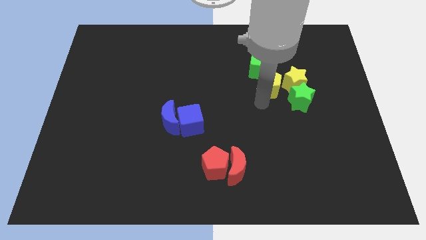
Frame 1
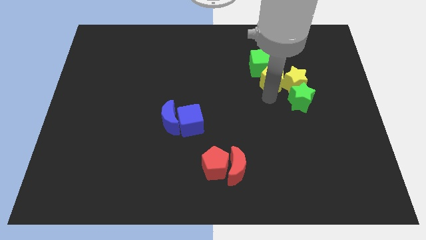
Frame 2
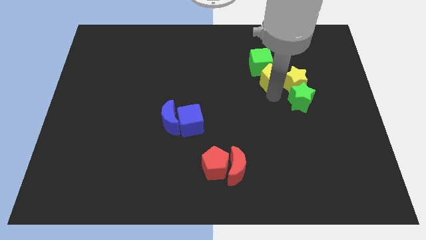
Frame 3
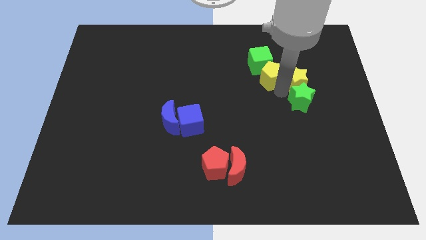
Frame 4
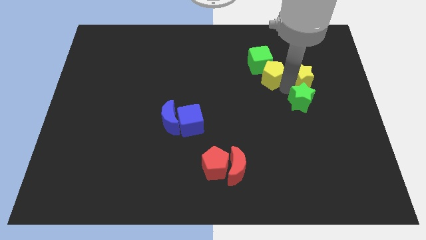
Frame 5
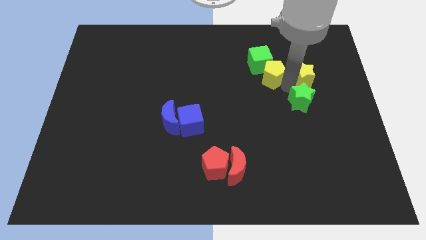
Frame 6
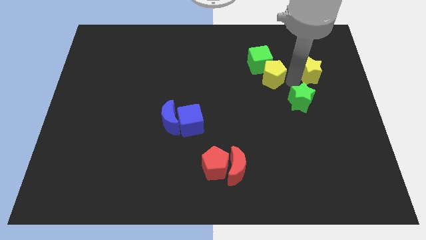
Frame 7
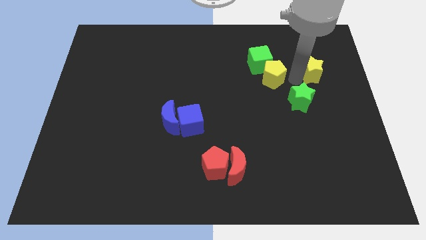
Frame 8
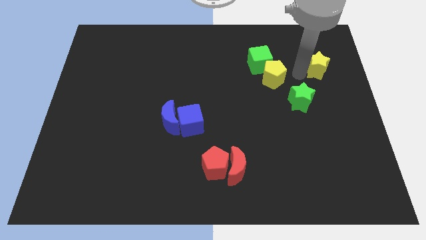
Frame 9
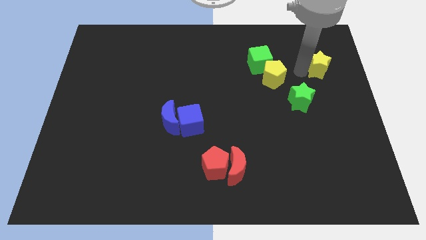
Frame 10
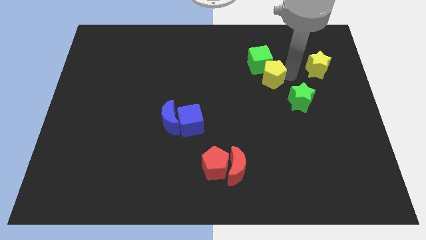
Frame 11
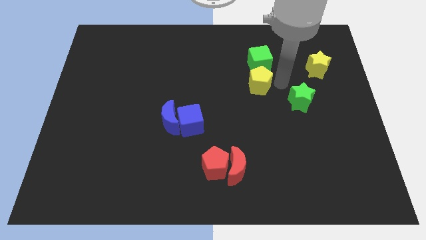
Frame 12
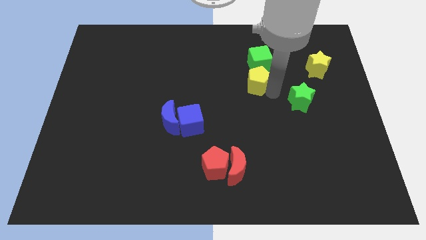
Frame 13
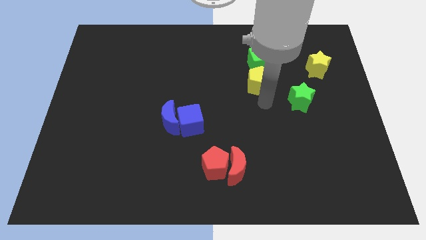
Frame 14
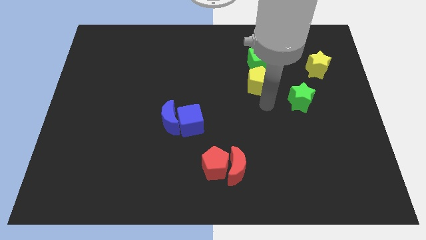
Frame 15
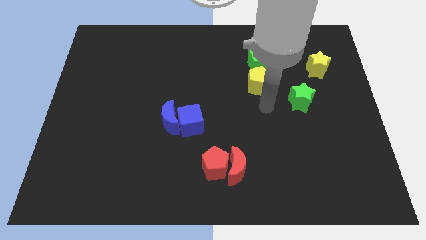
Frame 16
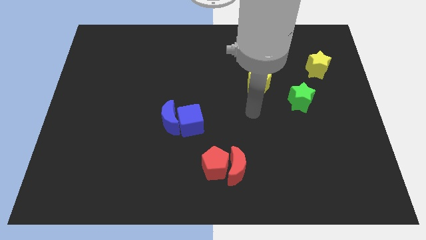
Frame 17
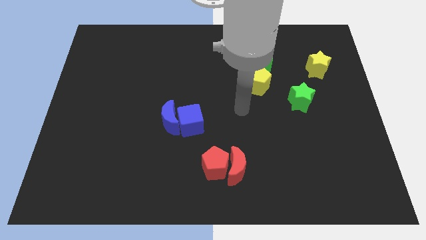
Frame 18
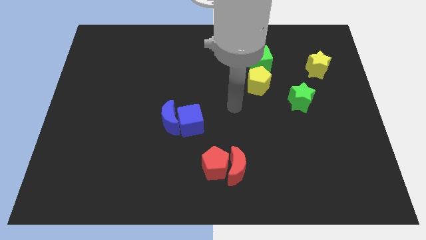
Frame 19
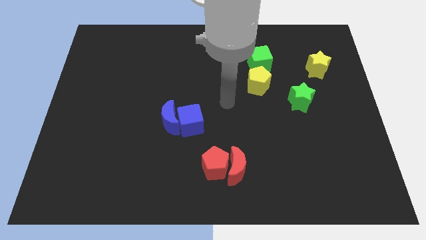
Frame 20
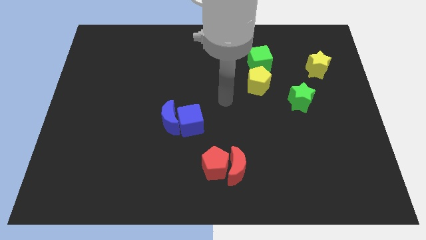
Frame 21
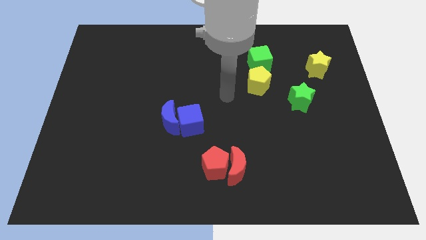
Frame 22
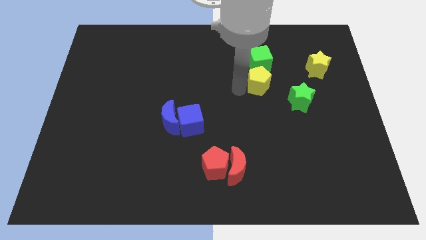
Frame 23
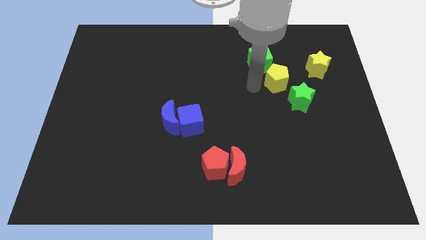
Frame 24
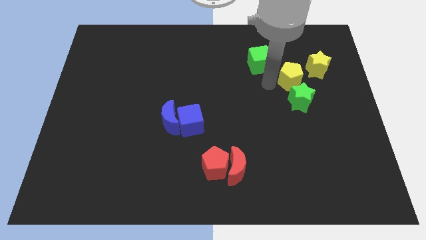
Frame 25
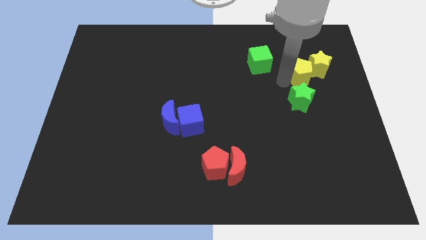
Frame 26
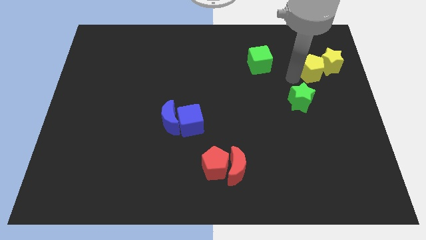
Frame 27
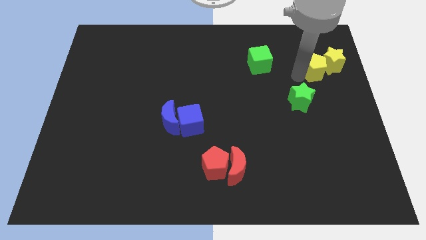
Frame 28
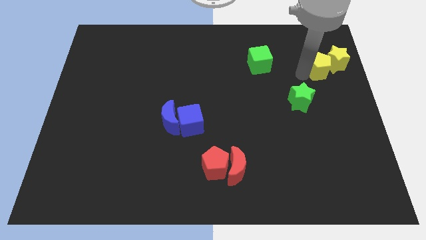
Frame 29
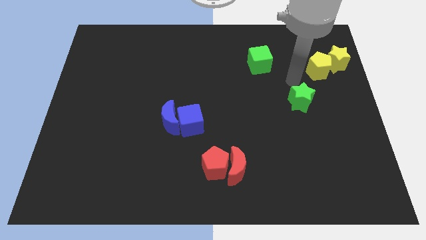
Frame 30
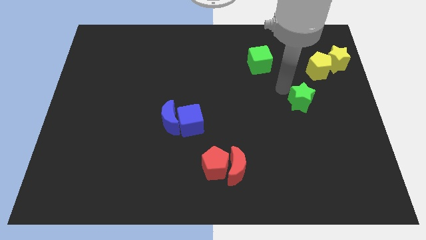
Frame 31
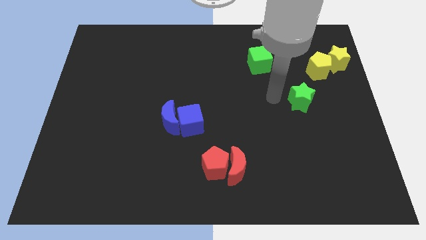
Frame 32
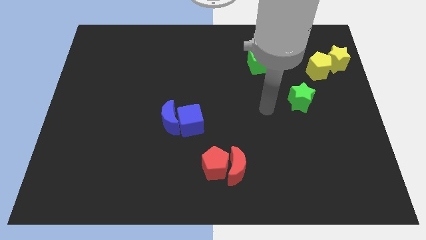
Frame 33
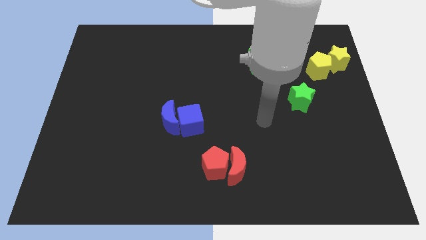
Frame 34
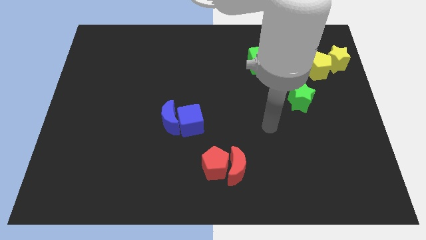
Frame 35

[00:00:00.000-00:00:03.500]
push yellow pentagon towards yellow star

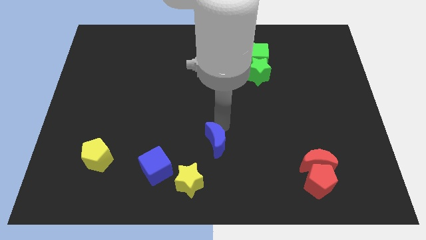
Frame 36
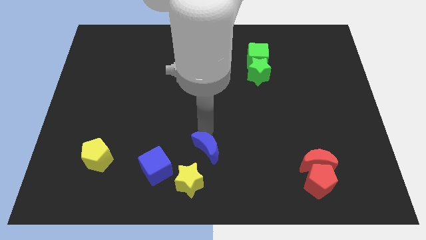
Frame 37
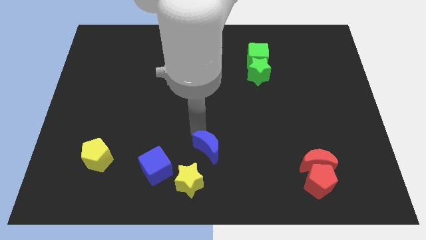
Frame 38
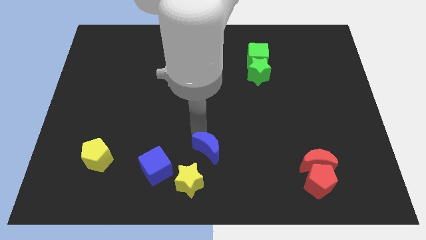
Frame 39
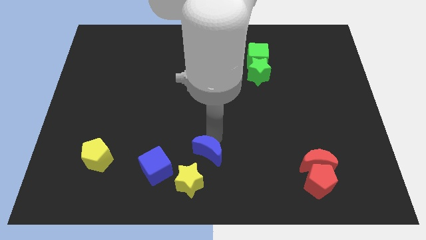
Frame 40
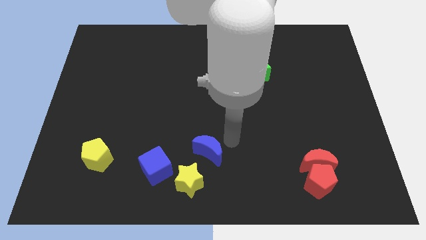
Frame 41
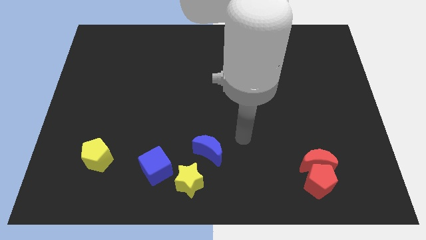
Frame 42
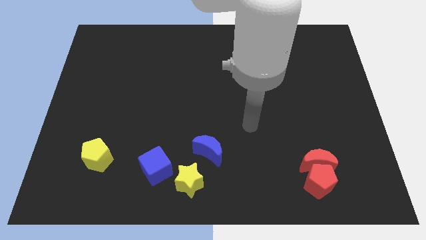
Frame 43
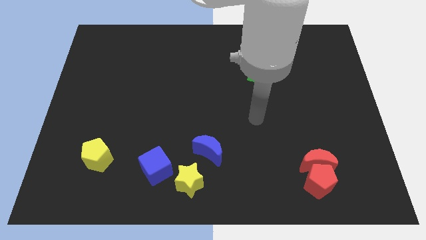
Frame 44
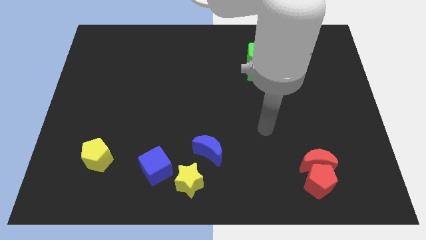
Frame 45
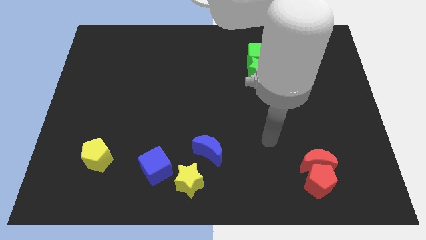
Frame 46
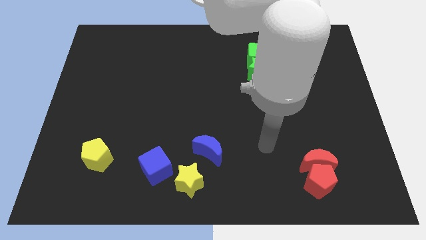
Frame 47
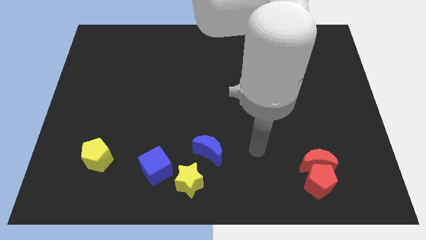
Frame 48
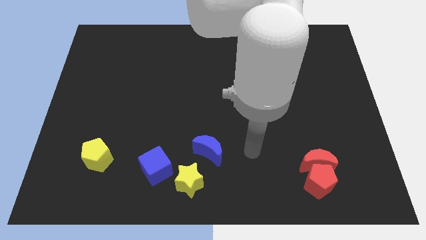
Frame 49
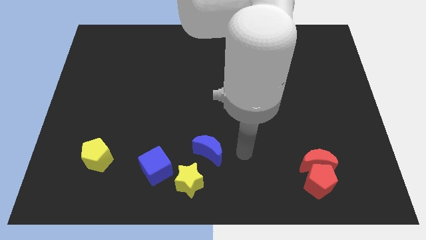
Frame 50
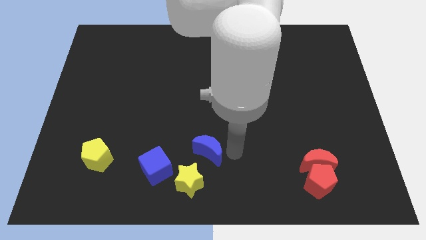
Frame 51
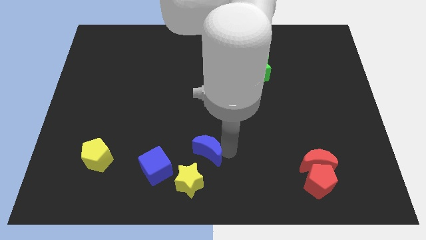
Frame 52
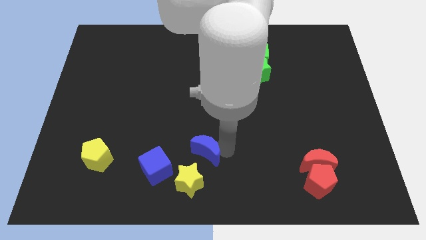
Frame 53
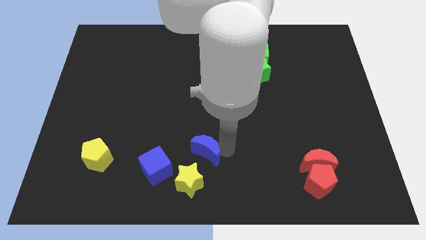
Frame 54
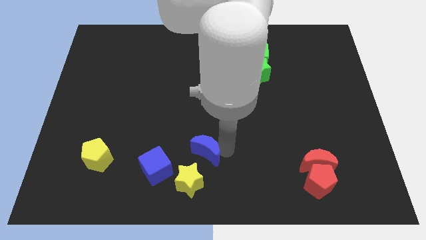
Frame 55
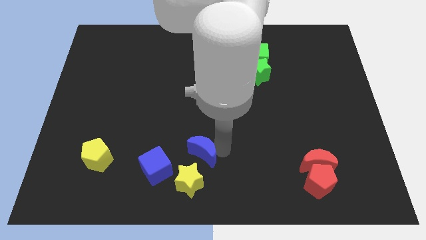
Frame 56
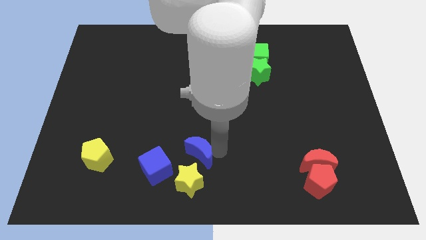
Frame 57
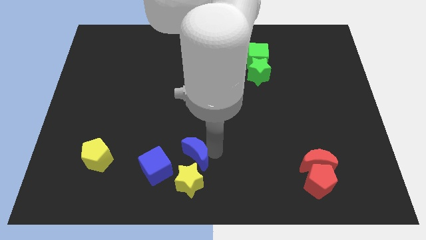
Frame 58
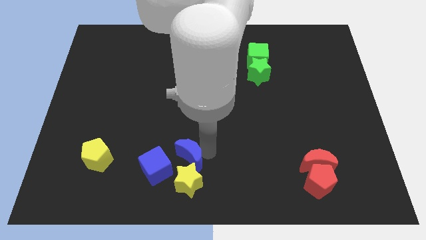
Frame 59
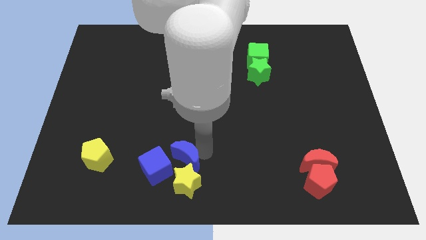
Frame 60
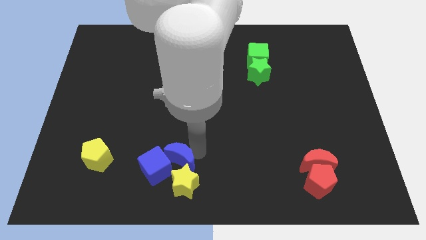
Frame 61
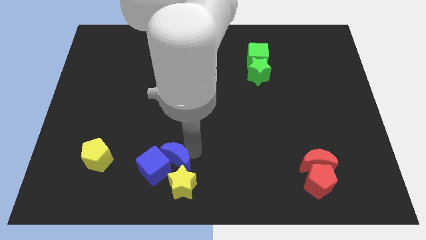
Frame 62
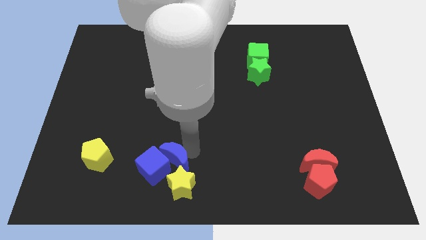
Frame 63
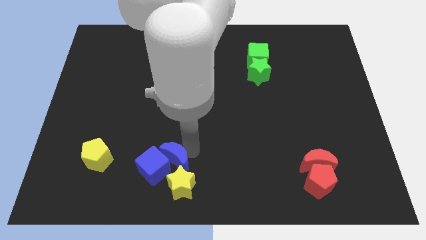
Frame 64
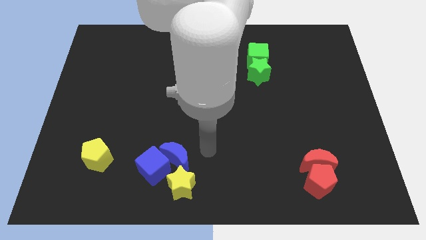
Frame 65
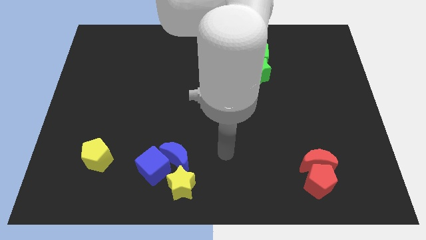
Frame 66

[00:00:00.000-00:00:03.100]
push blue crescent into the blue cube

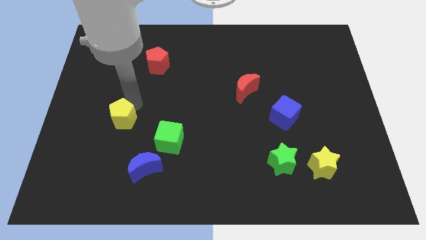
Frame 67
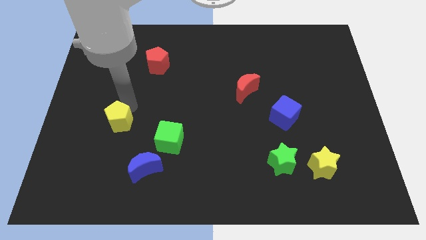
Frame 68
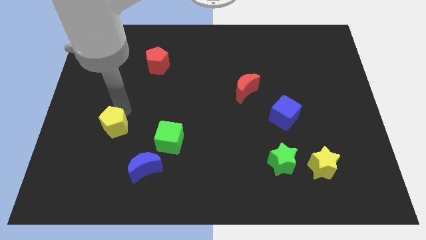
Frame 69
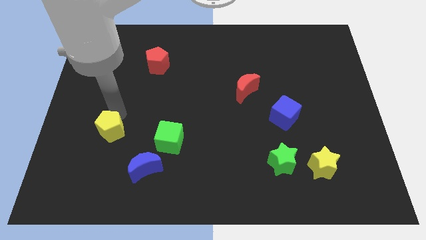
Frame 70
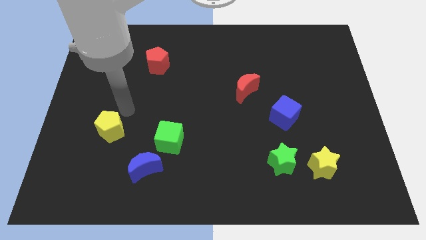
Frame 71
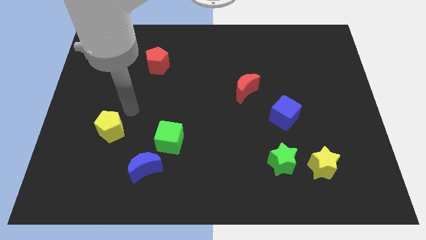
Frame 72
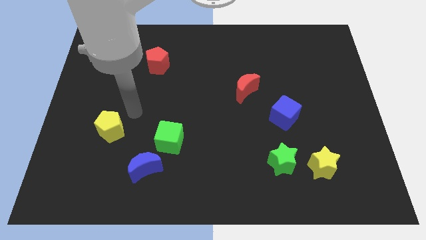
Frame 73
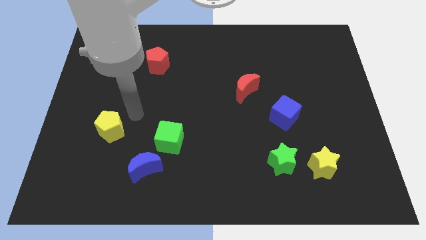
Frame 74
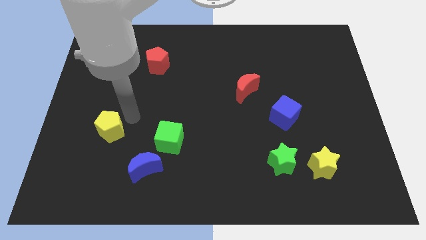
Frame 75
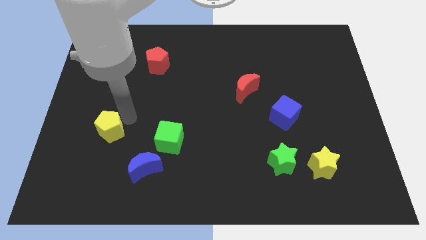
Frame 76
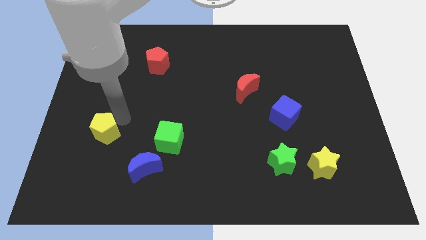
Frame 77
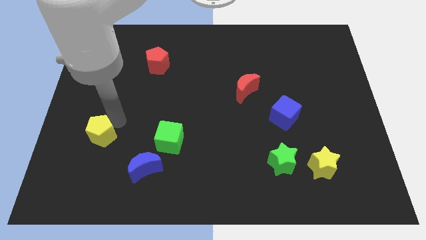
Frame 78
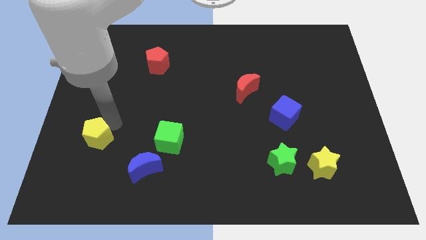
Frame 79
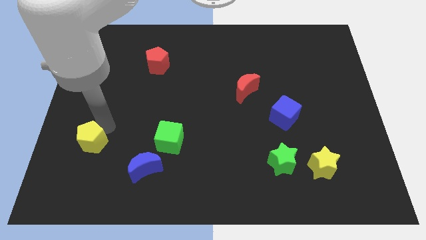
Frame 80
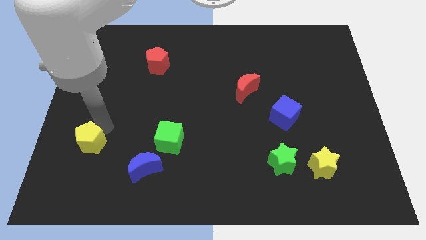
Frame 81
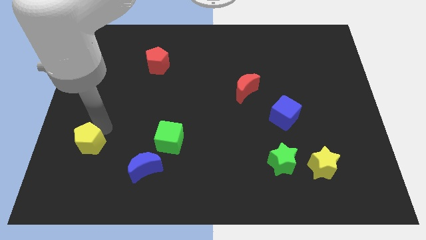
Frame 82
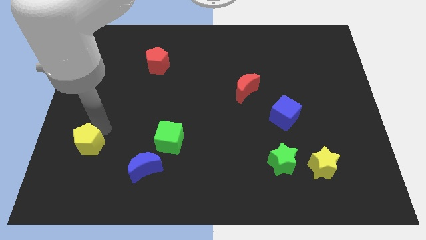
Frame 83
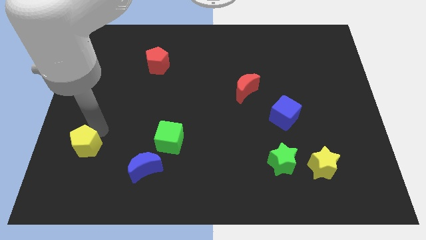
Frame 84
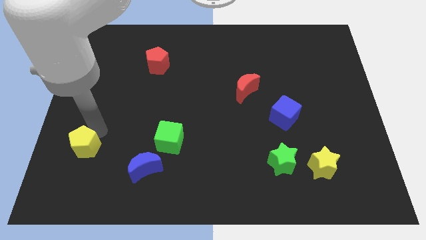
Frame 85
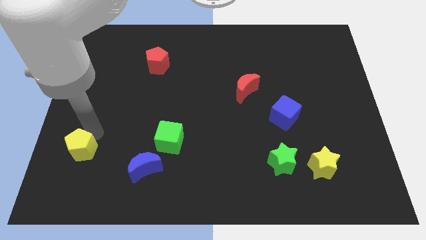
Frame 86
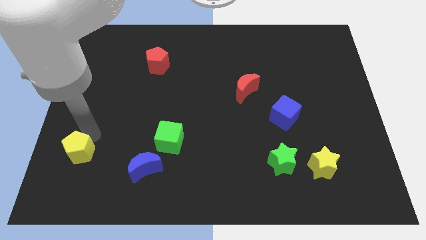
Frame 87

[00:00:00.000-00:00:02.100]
move yellow pentagon to the bottom left of green cube

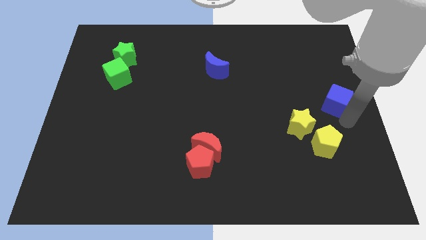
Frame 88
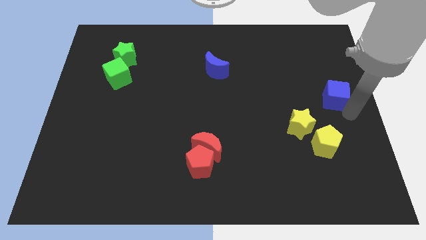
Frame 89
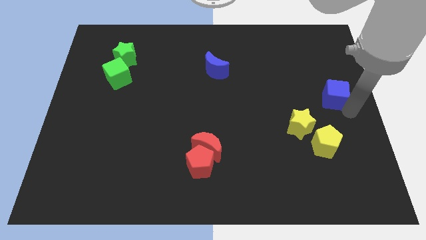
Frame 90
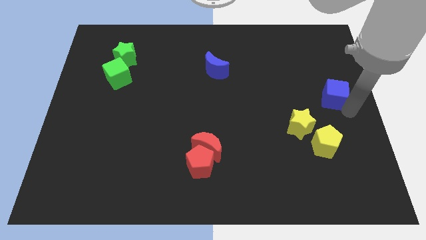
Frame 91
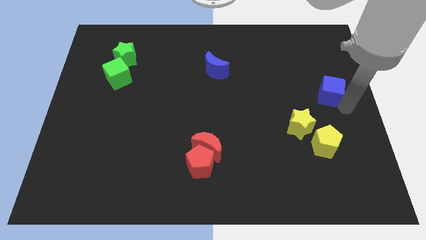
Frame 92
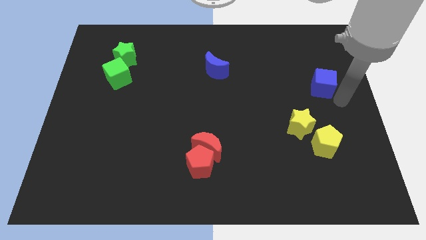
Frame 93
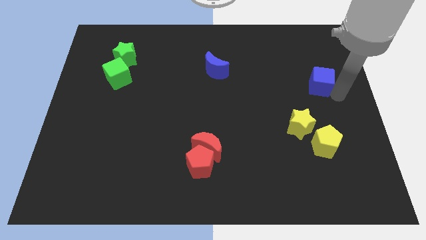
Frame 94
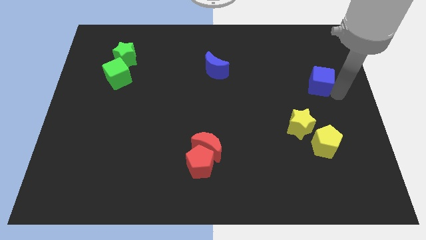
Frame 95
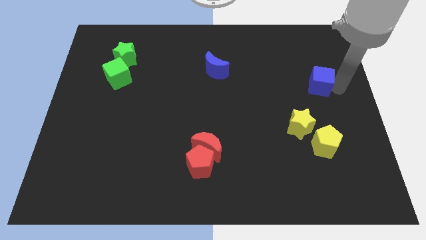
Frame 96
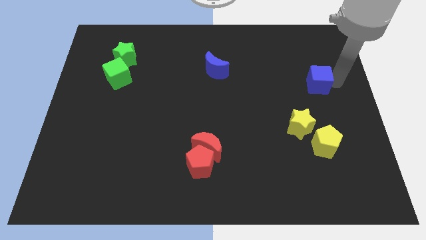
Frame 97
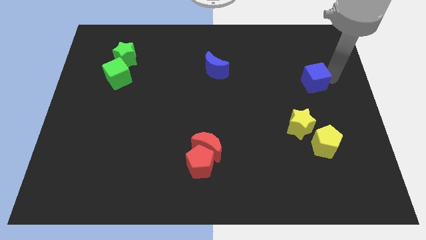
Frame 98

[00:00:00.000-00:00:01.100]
drag the blue cube slightly upwards
